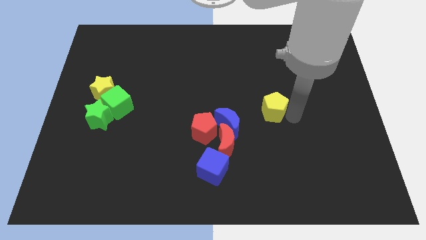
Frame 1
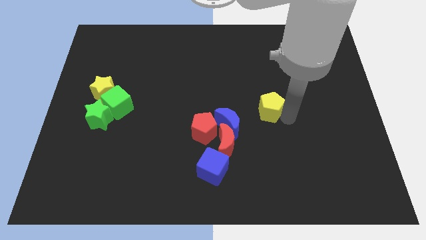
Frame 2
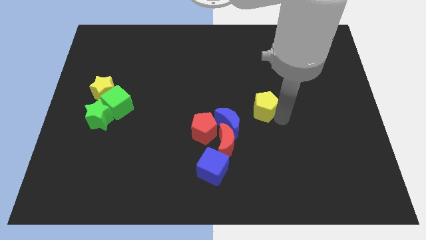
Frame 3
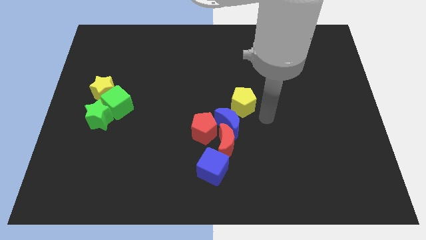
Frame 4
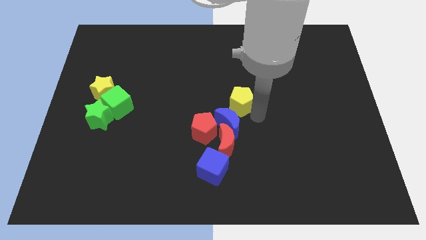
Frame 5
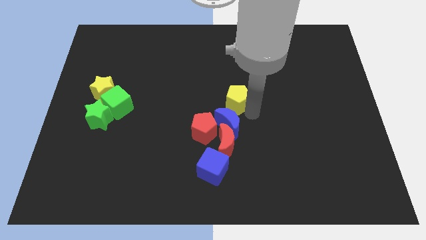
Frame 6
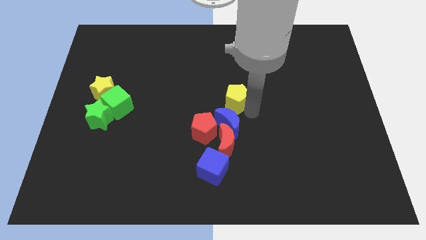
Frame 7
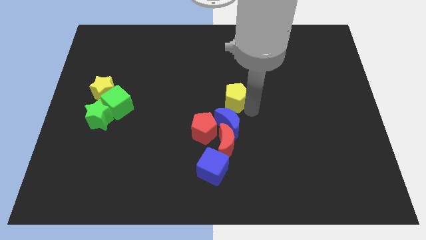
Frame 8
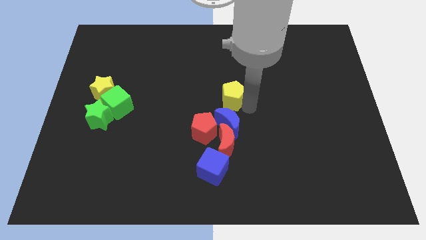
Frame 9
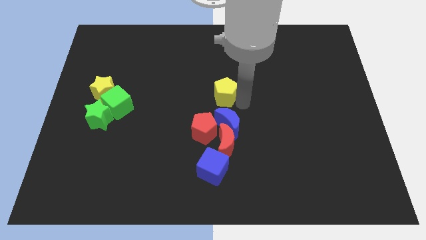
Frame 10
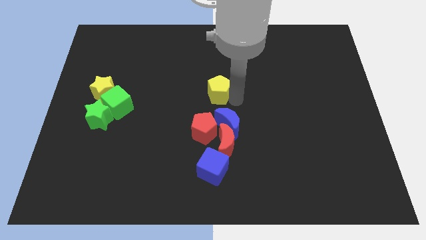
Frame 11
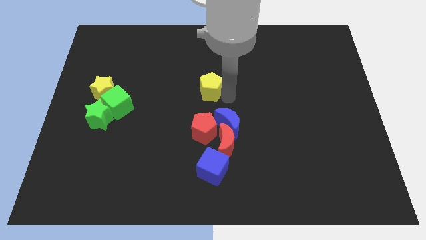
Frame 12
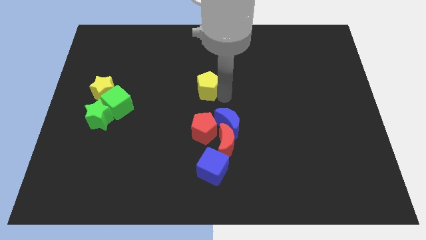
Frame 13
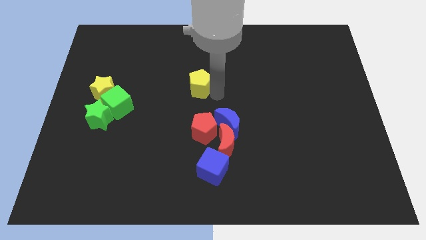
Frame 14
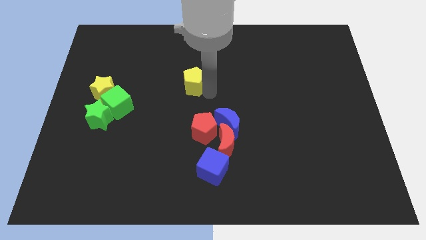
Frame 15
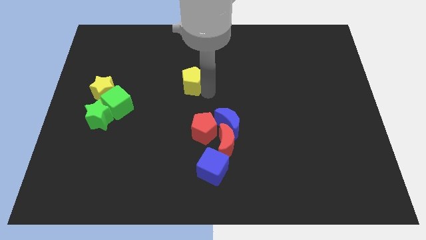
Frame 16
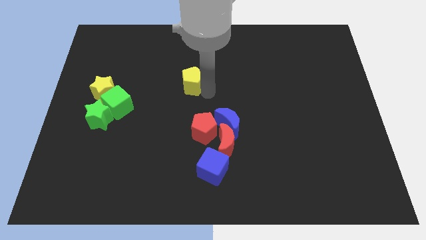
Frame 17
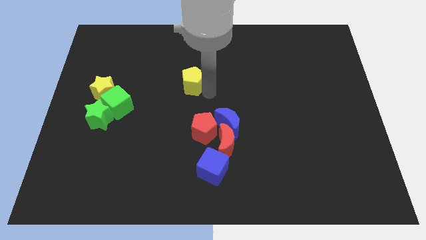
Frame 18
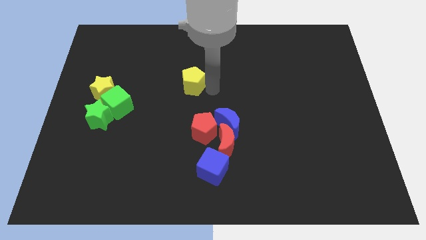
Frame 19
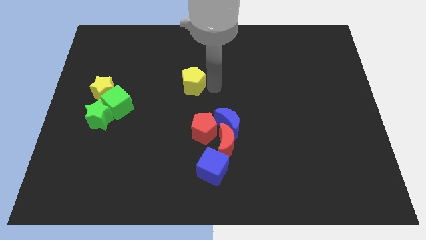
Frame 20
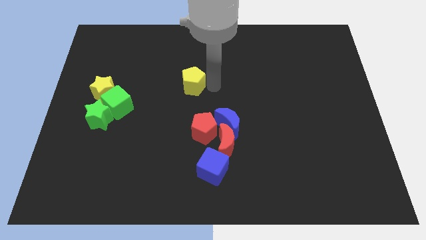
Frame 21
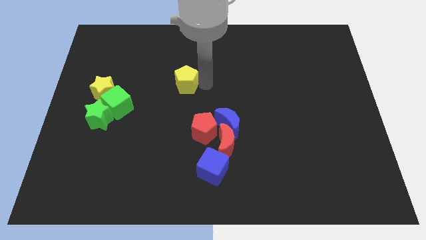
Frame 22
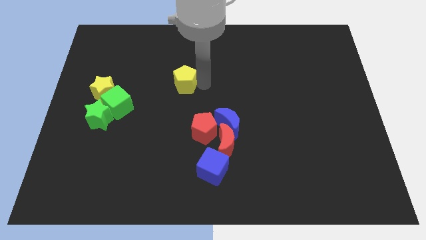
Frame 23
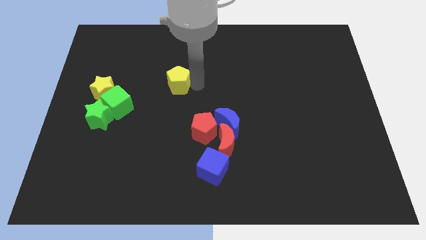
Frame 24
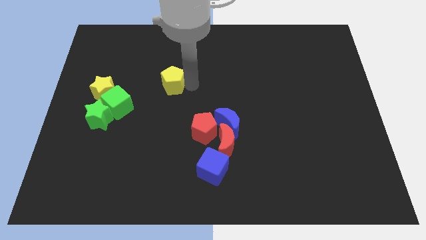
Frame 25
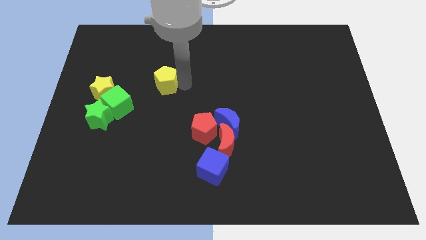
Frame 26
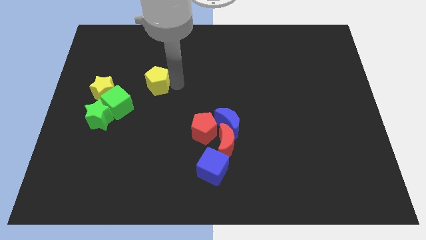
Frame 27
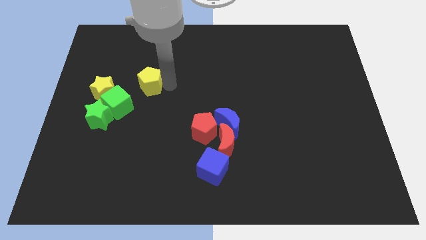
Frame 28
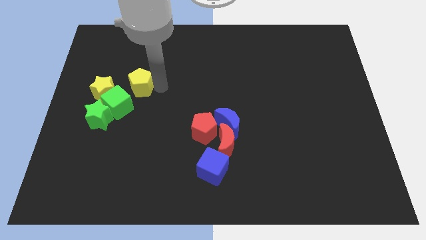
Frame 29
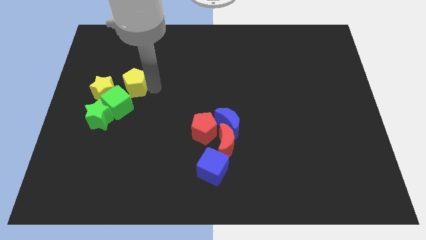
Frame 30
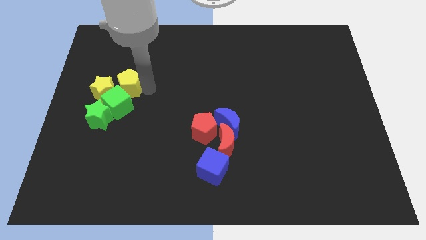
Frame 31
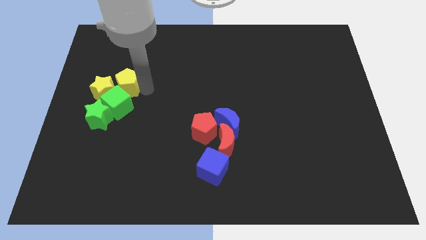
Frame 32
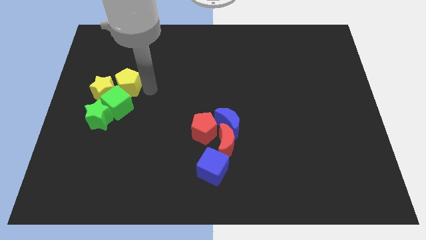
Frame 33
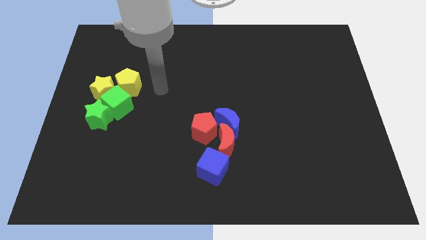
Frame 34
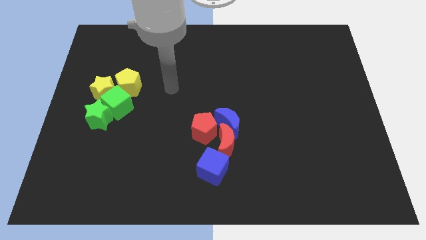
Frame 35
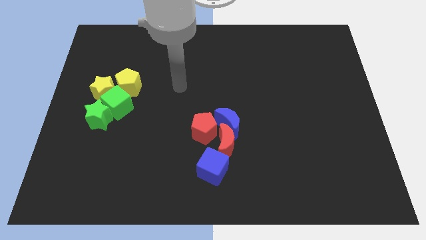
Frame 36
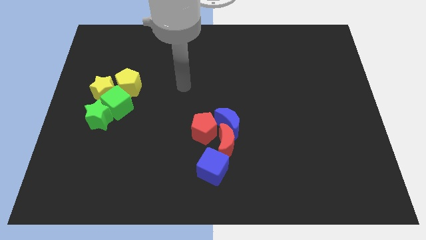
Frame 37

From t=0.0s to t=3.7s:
add the yellow pentagon to the group of blocks at the center left side of the board

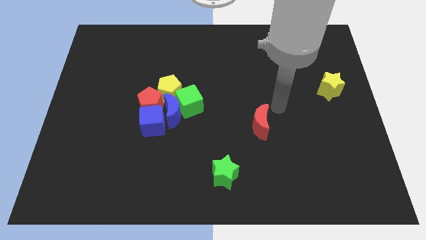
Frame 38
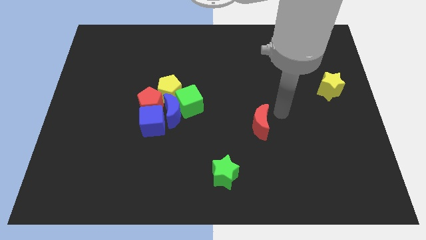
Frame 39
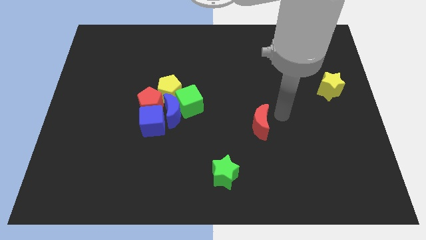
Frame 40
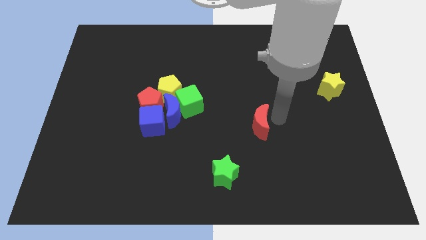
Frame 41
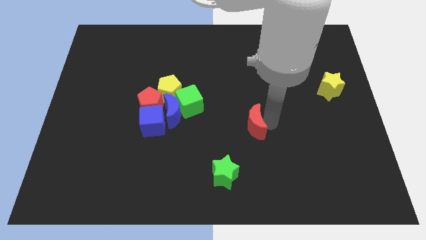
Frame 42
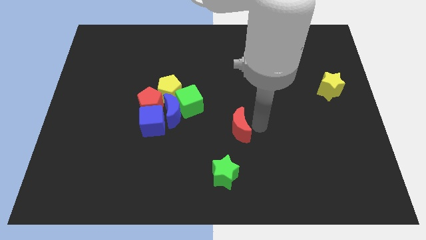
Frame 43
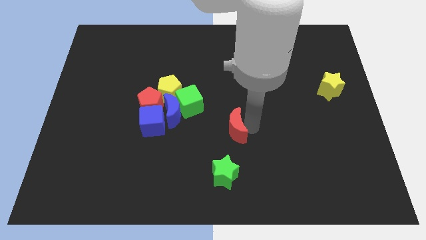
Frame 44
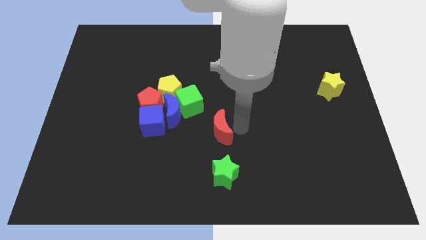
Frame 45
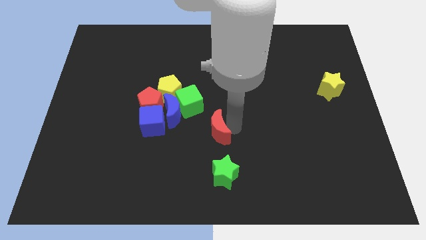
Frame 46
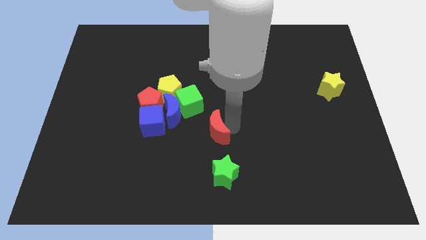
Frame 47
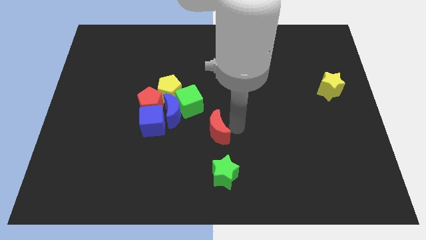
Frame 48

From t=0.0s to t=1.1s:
move the red crescent to the top of the green star

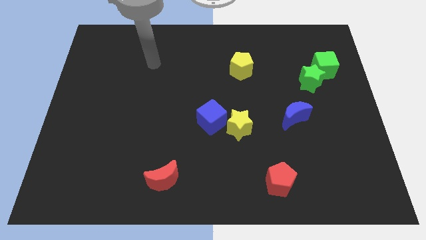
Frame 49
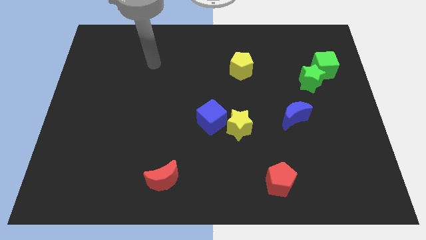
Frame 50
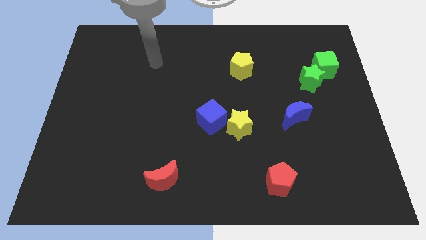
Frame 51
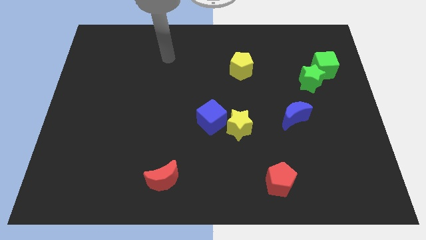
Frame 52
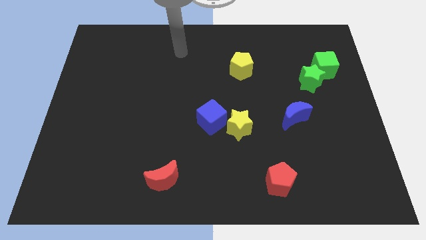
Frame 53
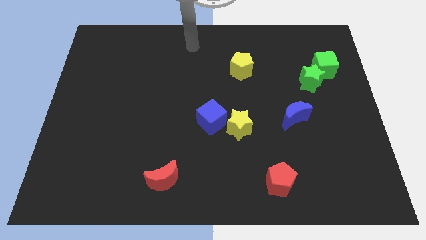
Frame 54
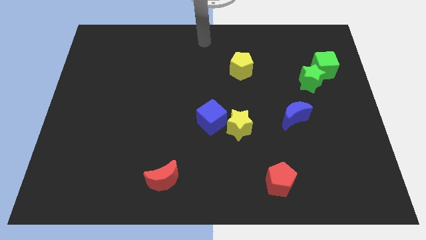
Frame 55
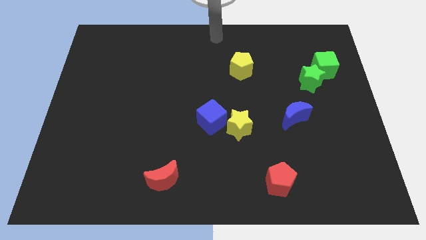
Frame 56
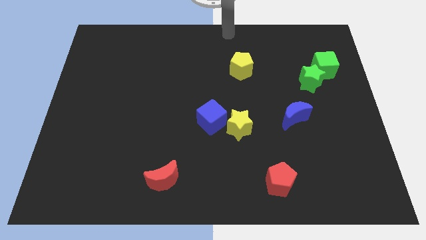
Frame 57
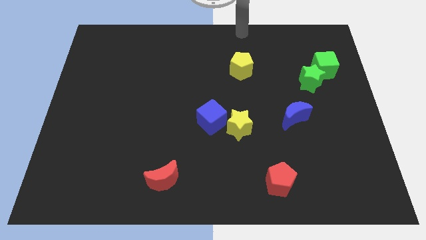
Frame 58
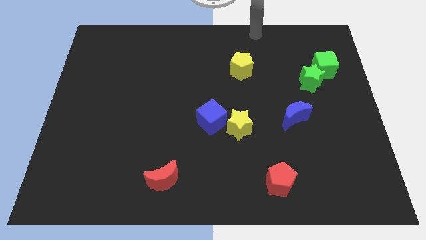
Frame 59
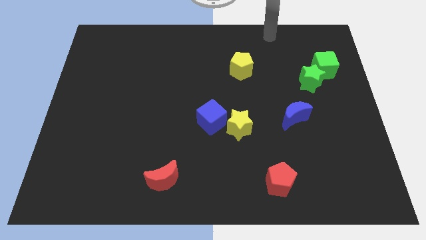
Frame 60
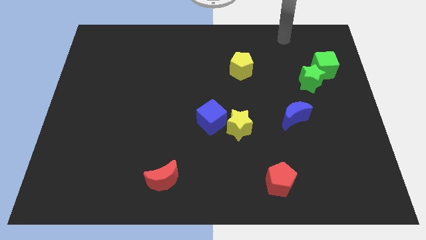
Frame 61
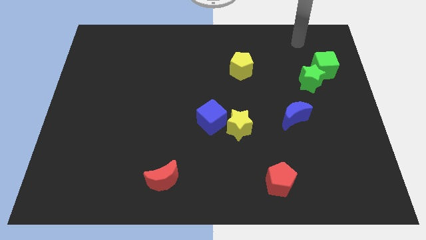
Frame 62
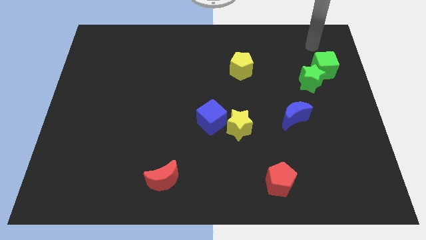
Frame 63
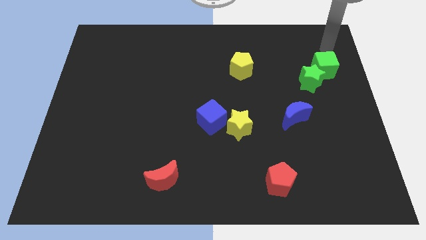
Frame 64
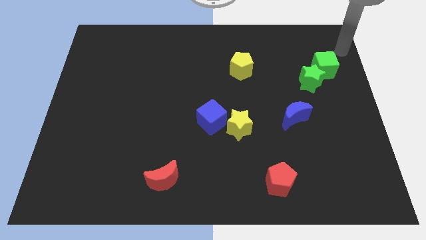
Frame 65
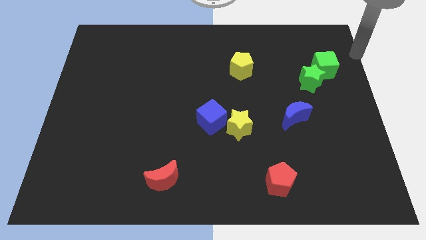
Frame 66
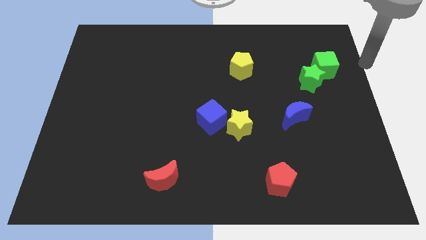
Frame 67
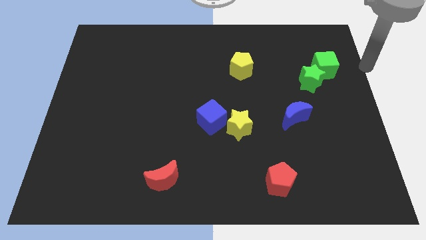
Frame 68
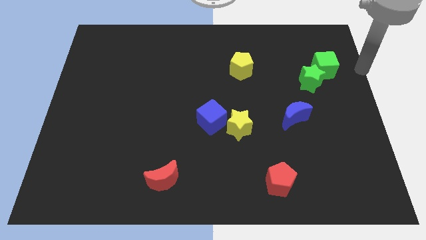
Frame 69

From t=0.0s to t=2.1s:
move your arm towards the right side of the green cube

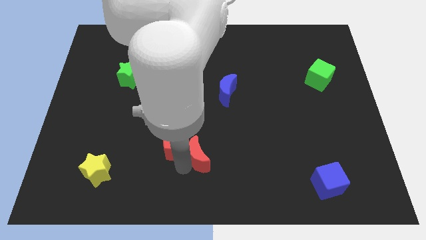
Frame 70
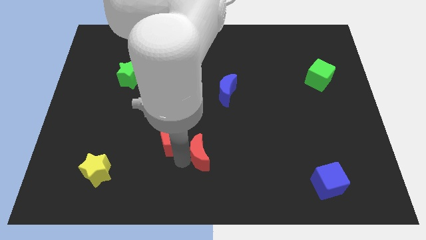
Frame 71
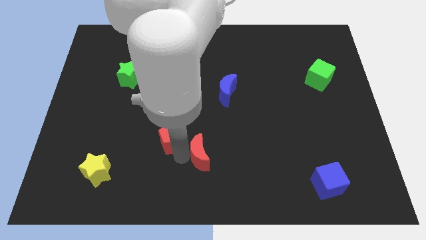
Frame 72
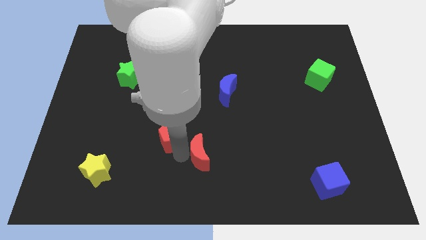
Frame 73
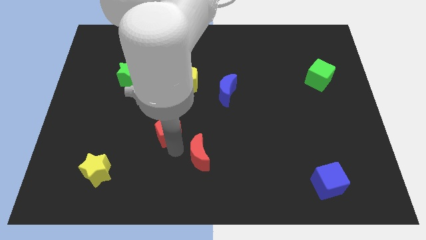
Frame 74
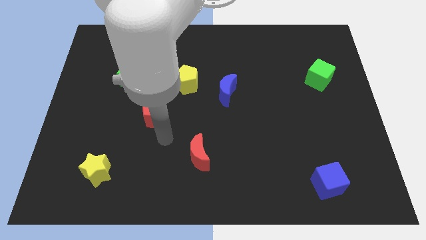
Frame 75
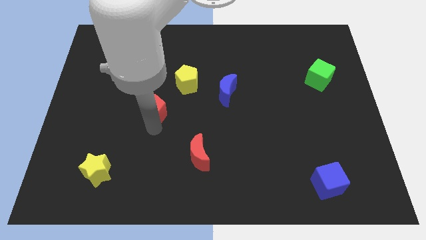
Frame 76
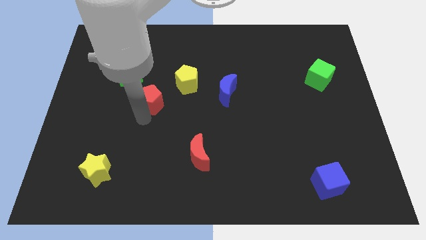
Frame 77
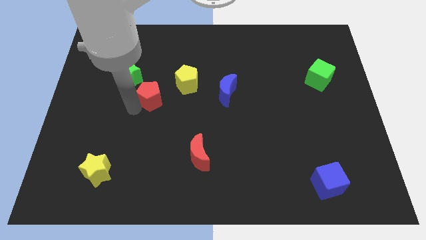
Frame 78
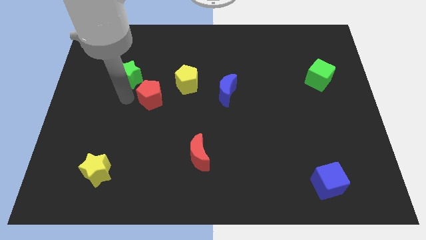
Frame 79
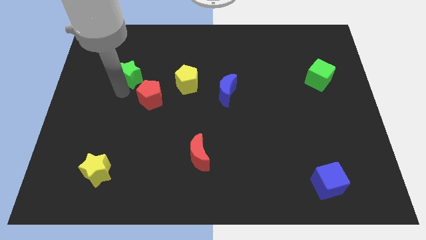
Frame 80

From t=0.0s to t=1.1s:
move red pentagon towards green star

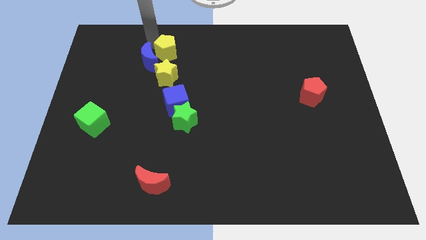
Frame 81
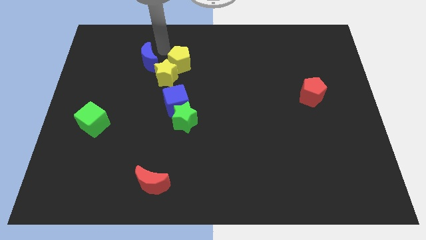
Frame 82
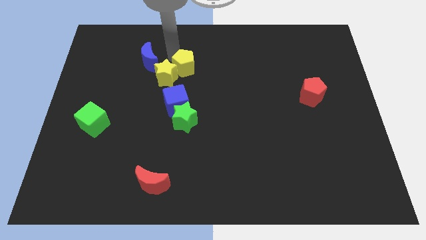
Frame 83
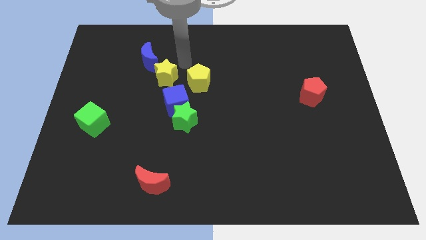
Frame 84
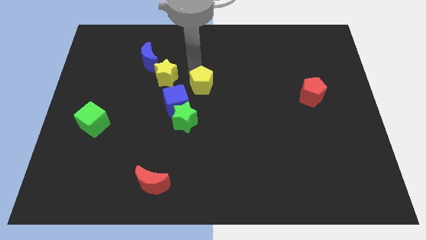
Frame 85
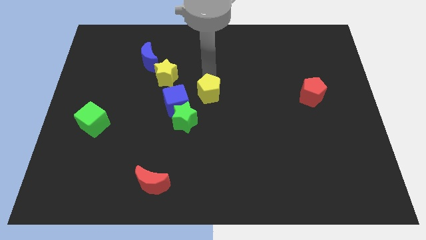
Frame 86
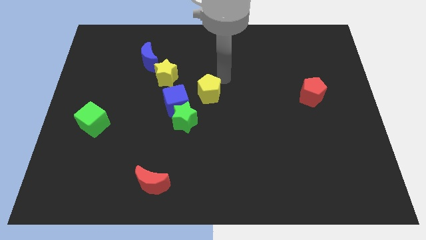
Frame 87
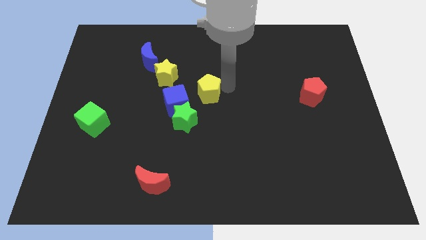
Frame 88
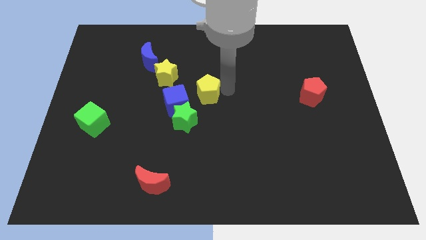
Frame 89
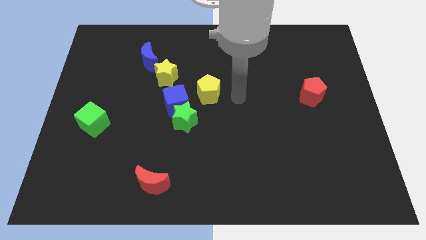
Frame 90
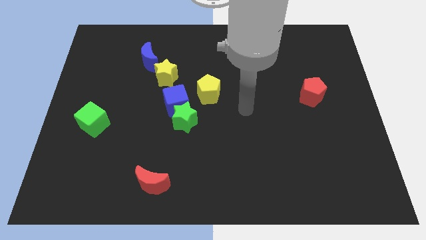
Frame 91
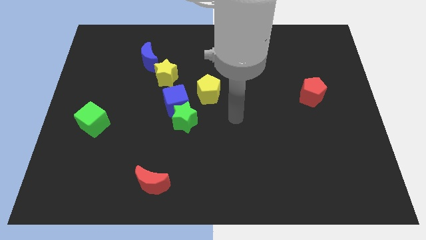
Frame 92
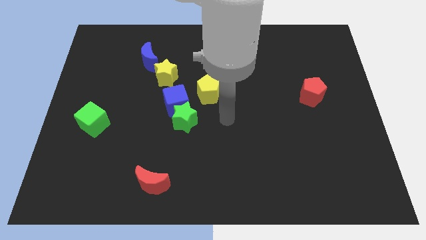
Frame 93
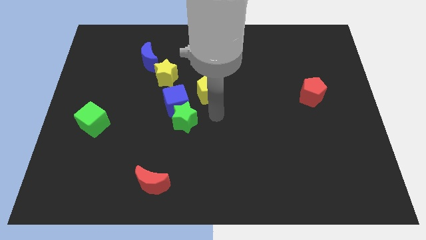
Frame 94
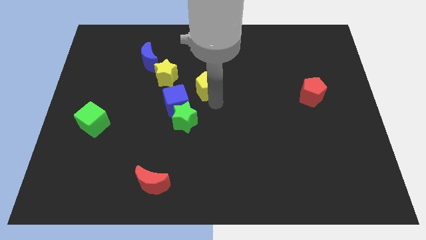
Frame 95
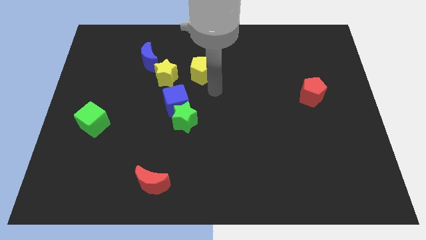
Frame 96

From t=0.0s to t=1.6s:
place yellow pentagon to the right side of the blue cube
